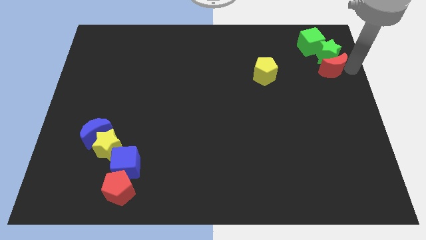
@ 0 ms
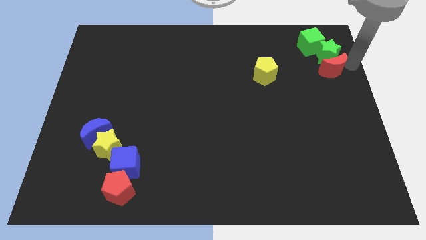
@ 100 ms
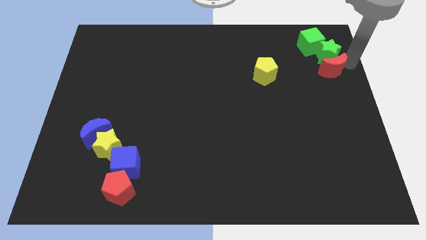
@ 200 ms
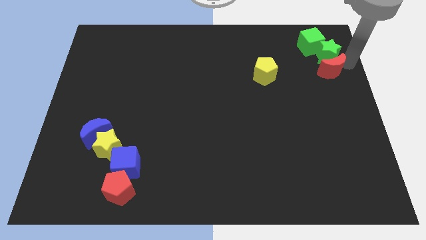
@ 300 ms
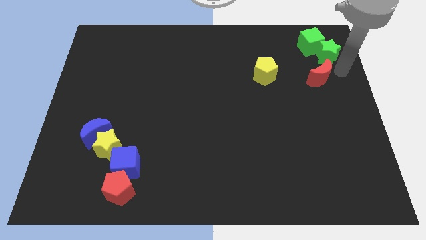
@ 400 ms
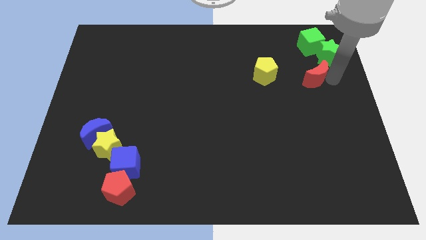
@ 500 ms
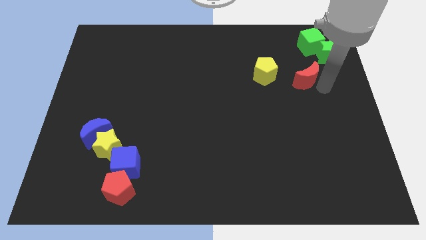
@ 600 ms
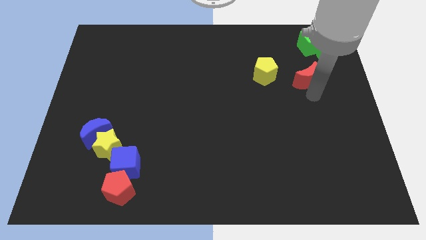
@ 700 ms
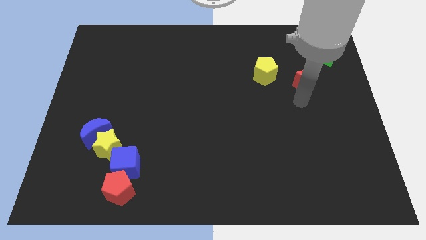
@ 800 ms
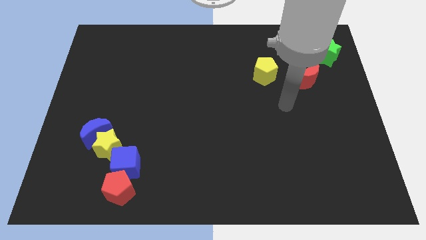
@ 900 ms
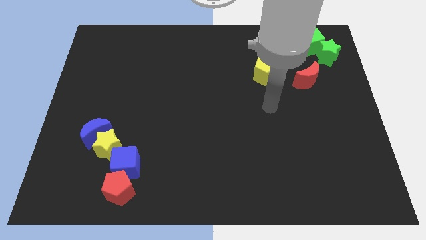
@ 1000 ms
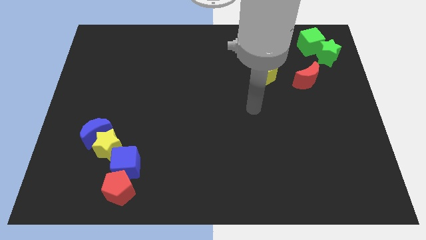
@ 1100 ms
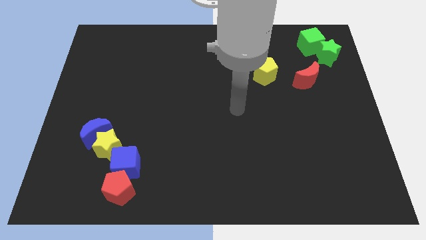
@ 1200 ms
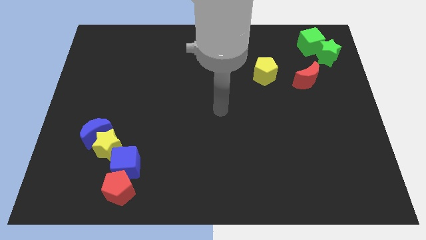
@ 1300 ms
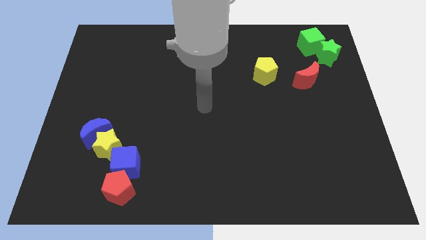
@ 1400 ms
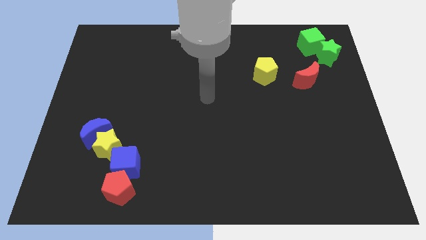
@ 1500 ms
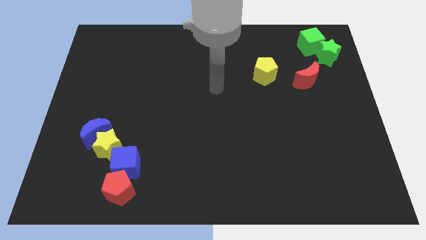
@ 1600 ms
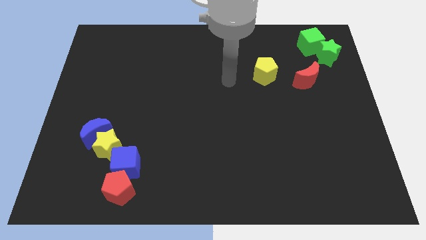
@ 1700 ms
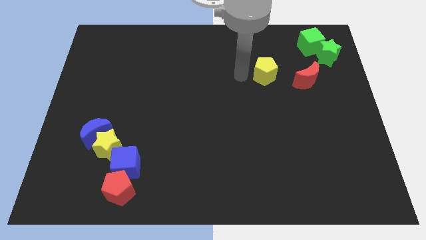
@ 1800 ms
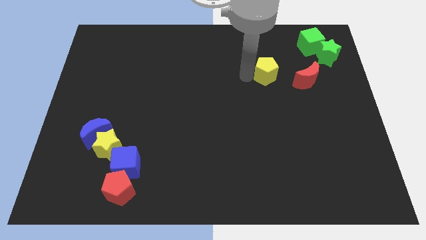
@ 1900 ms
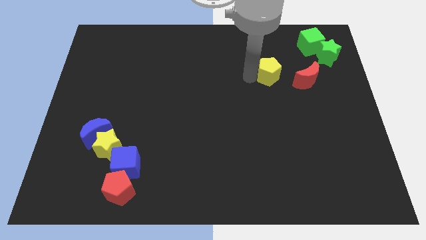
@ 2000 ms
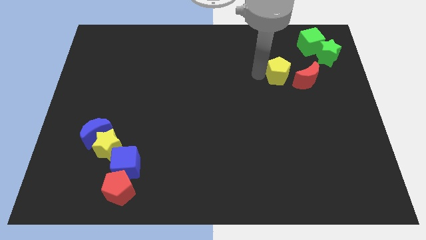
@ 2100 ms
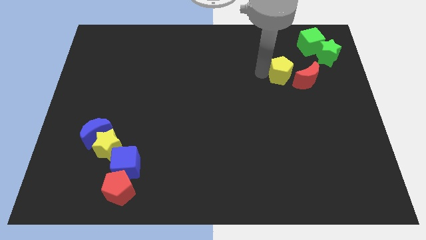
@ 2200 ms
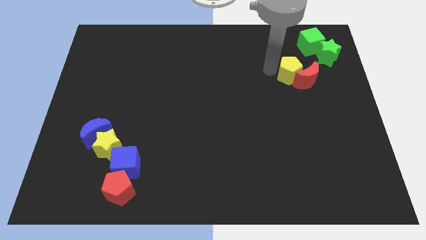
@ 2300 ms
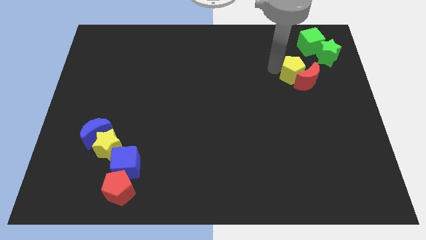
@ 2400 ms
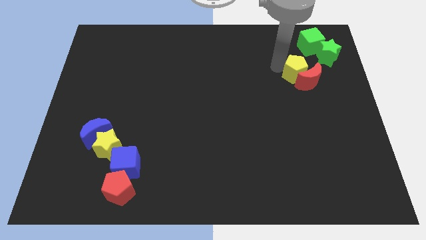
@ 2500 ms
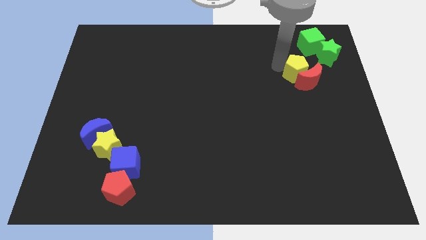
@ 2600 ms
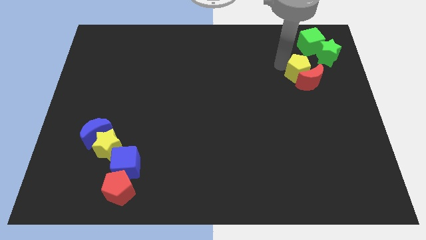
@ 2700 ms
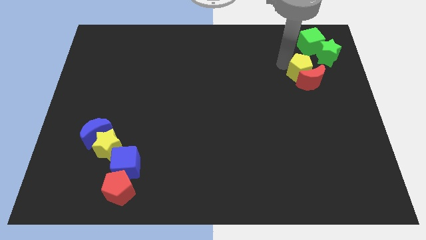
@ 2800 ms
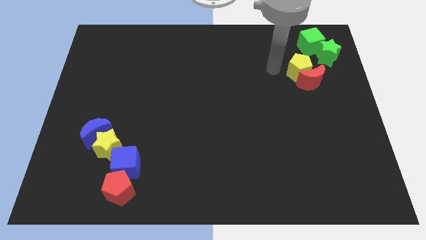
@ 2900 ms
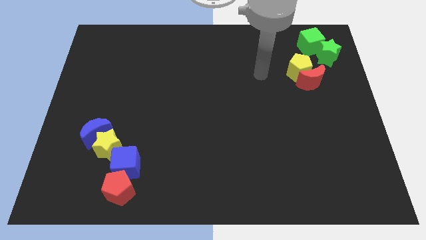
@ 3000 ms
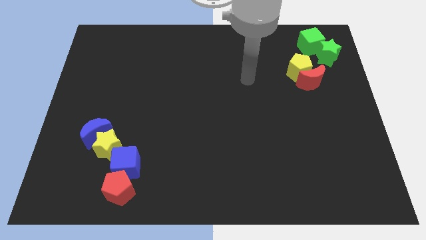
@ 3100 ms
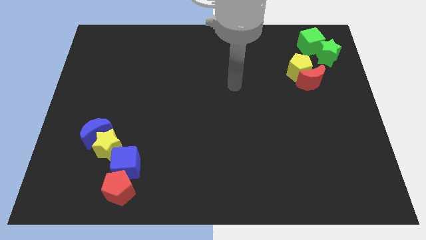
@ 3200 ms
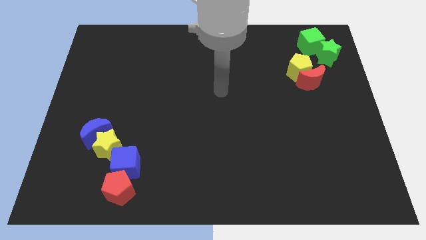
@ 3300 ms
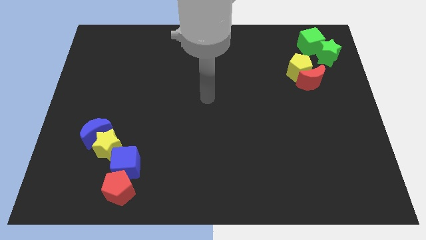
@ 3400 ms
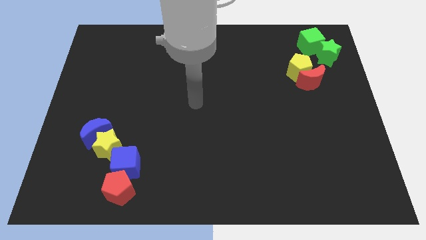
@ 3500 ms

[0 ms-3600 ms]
put the yellow pentagon into the red moon

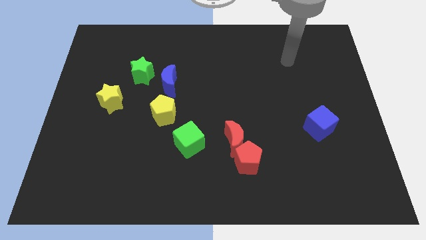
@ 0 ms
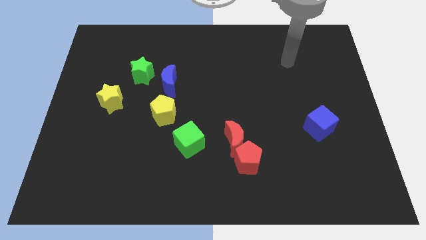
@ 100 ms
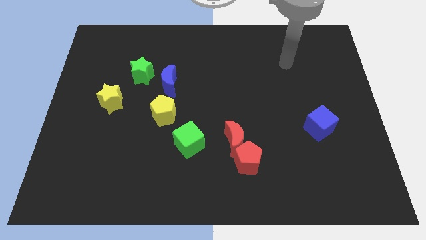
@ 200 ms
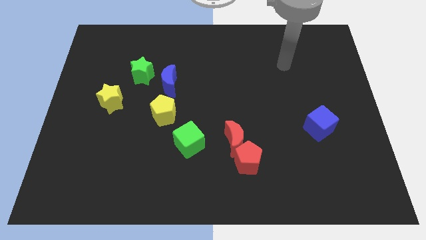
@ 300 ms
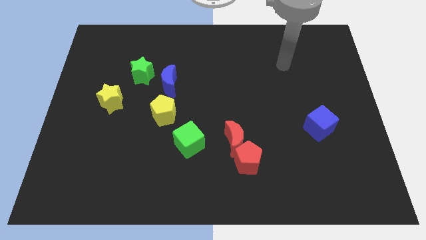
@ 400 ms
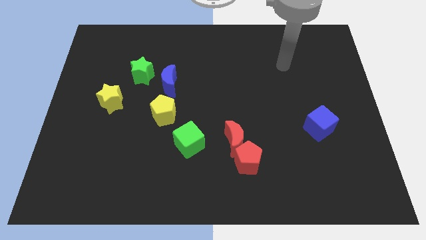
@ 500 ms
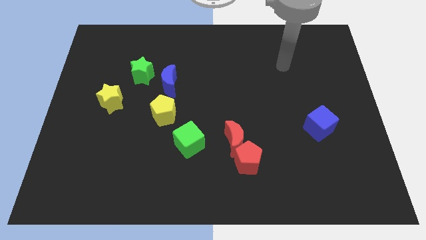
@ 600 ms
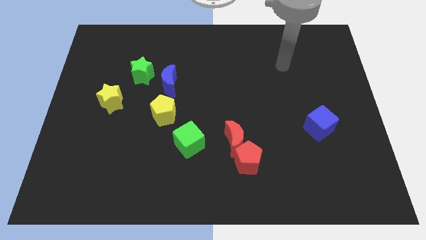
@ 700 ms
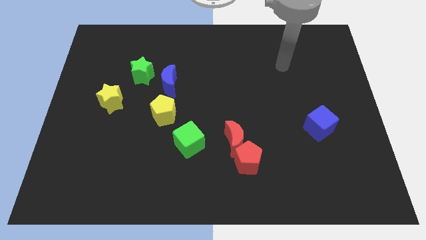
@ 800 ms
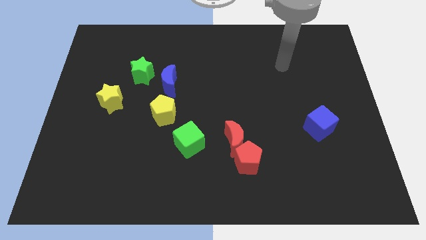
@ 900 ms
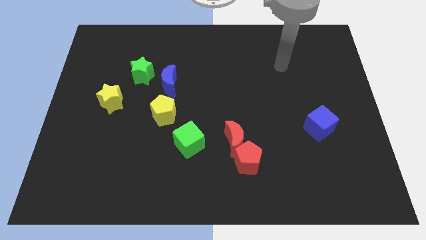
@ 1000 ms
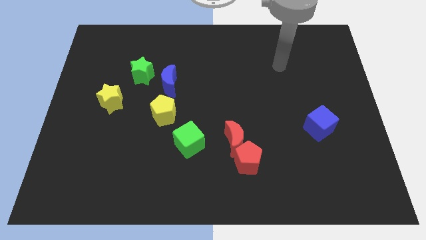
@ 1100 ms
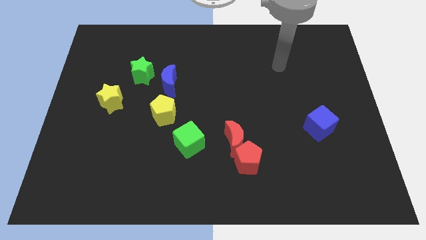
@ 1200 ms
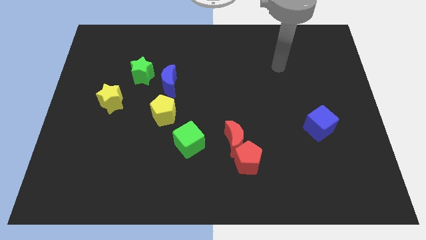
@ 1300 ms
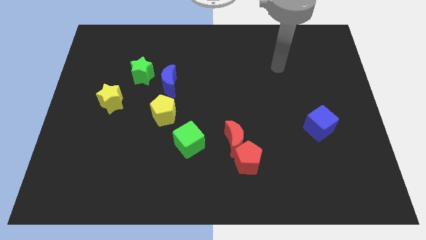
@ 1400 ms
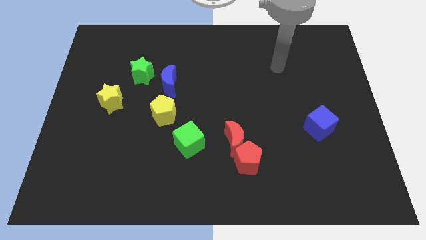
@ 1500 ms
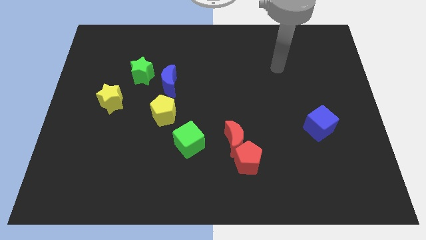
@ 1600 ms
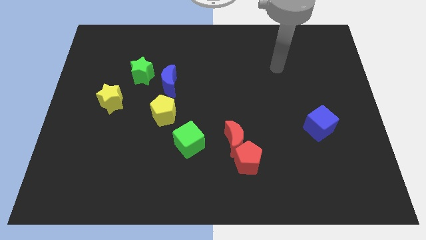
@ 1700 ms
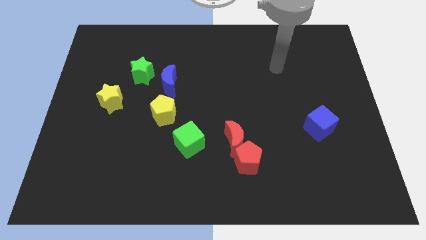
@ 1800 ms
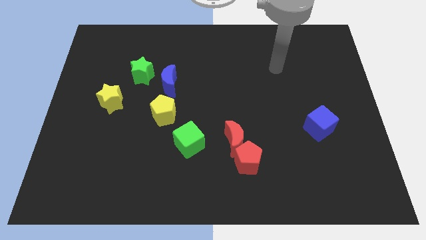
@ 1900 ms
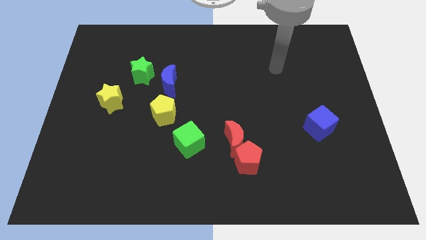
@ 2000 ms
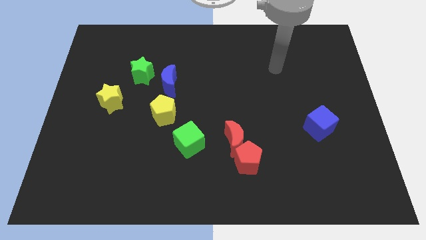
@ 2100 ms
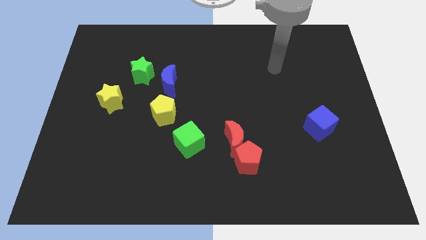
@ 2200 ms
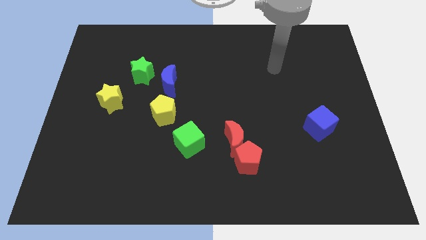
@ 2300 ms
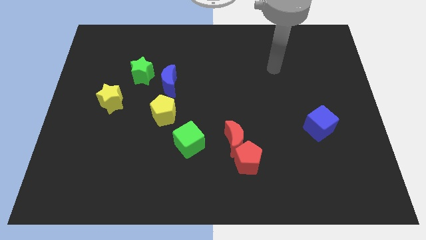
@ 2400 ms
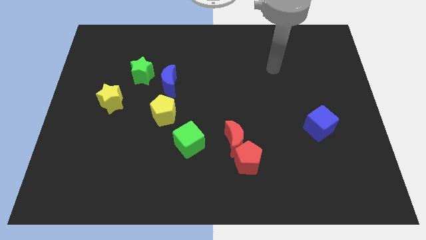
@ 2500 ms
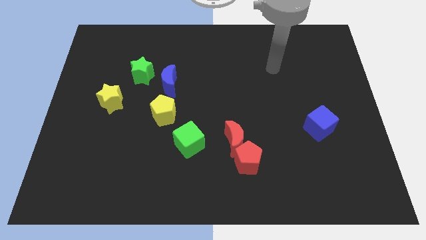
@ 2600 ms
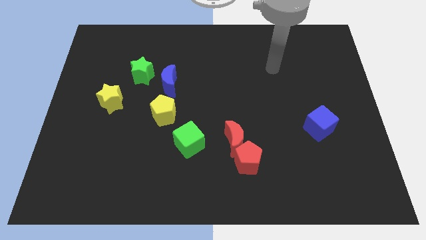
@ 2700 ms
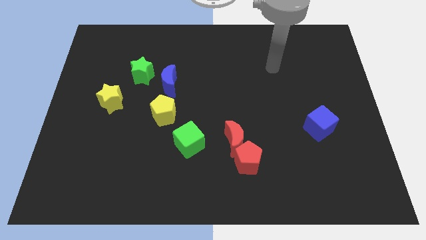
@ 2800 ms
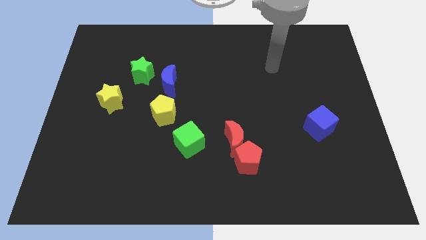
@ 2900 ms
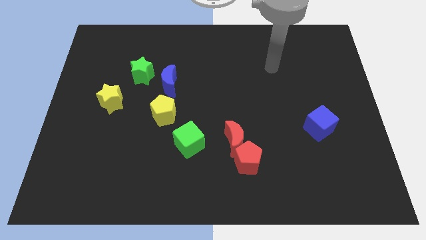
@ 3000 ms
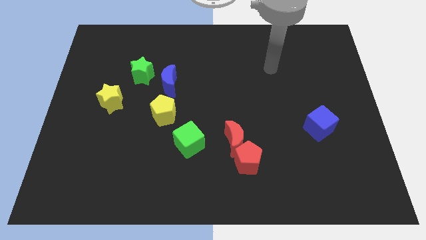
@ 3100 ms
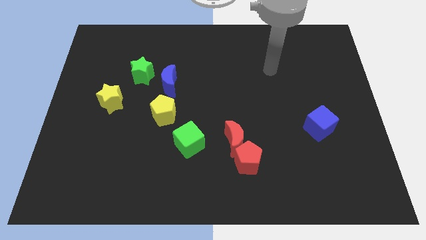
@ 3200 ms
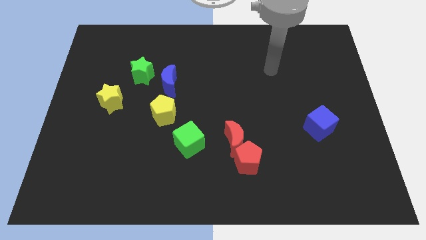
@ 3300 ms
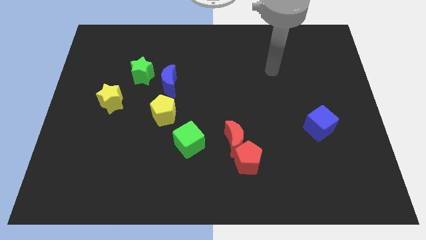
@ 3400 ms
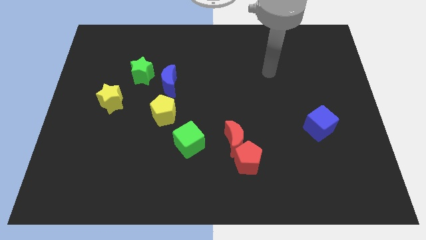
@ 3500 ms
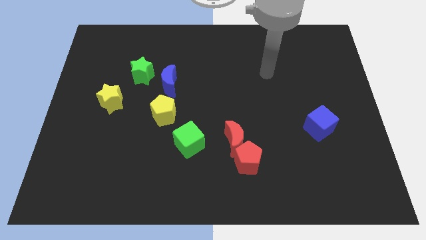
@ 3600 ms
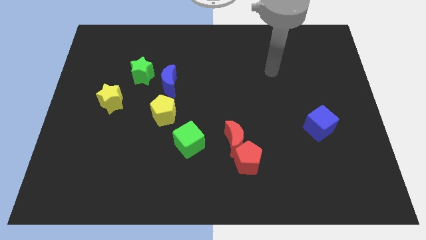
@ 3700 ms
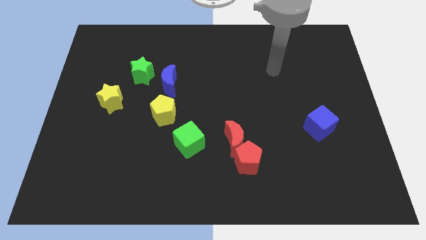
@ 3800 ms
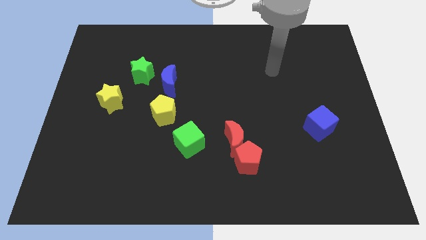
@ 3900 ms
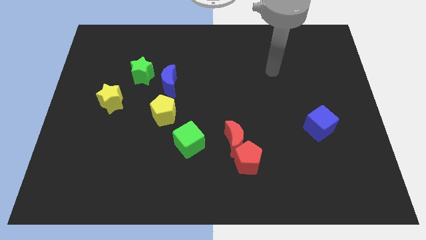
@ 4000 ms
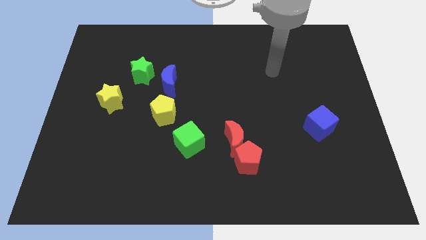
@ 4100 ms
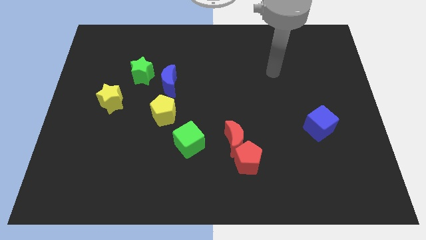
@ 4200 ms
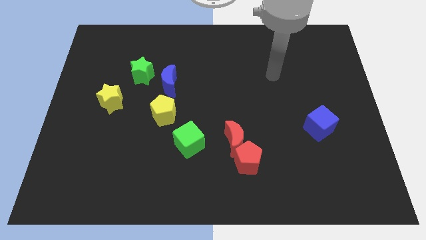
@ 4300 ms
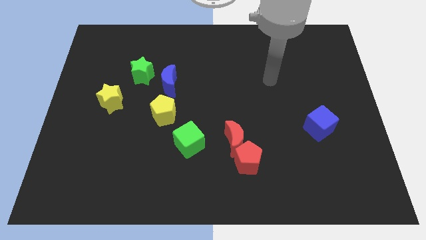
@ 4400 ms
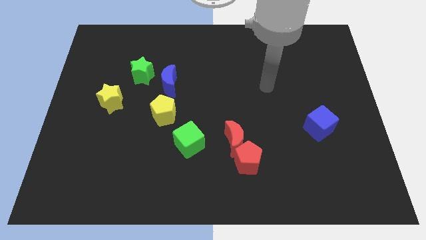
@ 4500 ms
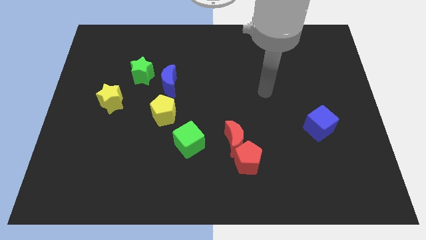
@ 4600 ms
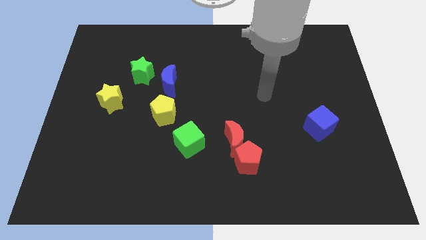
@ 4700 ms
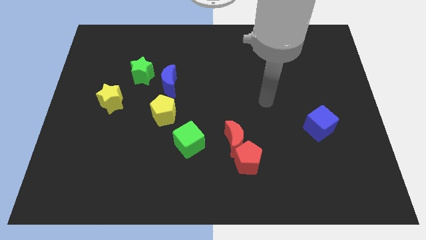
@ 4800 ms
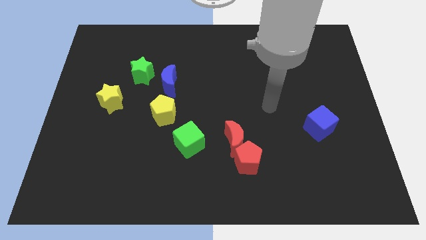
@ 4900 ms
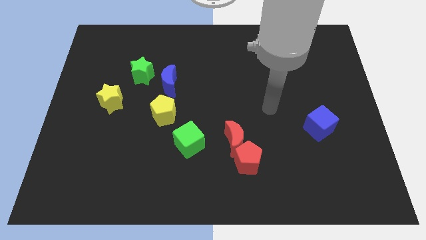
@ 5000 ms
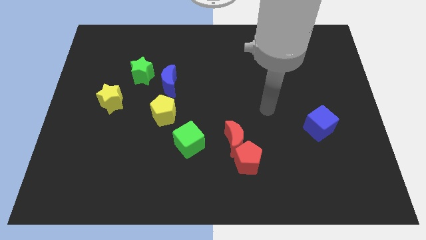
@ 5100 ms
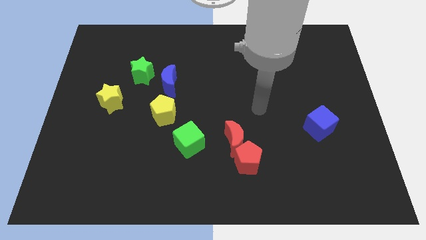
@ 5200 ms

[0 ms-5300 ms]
move the arm towards the red moon

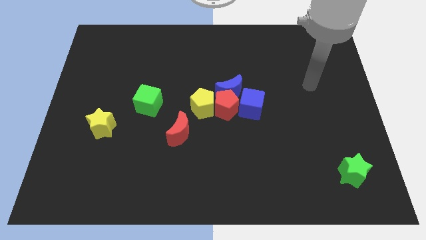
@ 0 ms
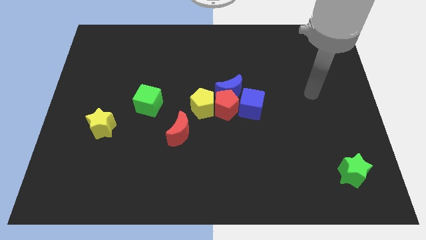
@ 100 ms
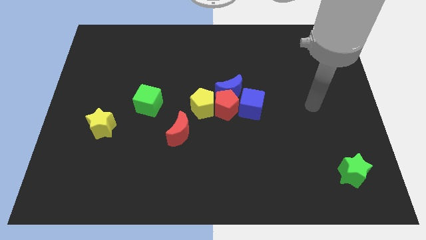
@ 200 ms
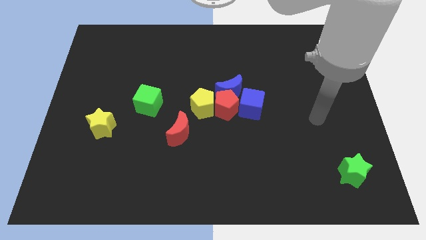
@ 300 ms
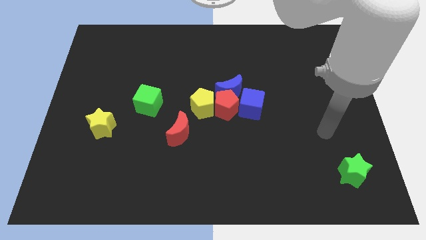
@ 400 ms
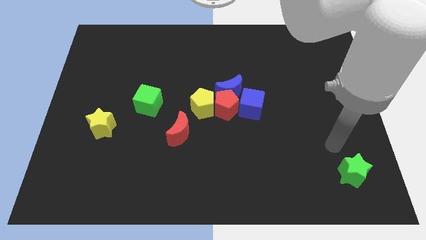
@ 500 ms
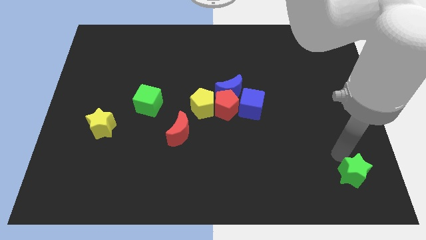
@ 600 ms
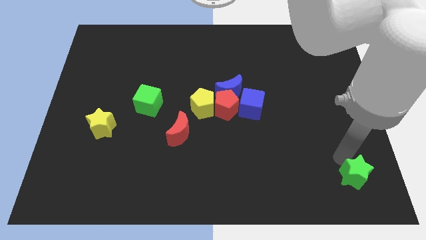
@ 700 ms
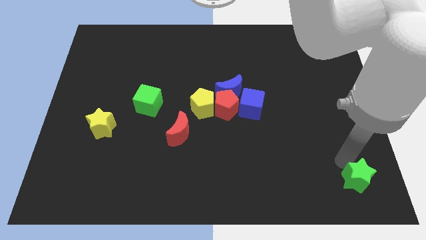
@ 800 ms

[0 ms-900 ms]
place your arm above green star
